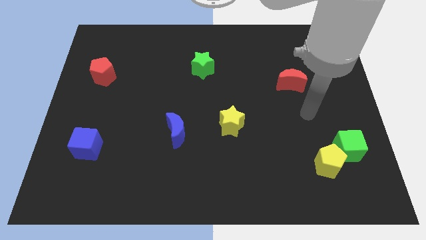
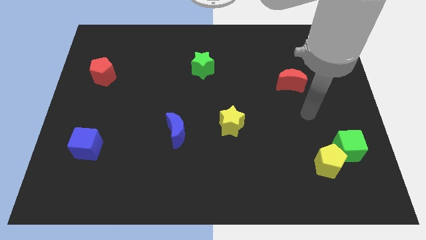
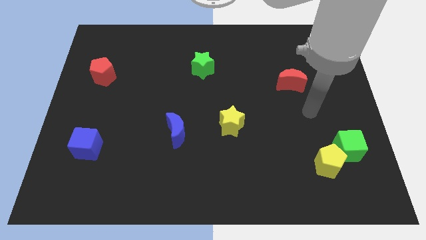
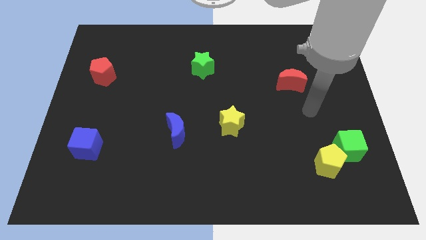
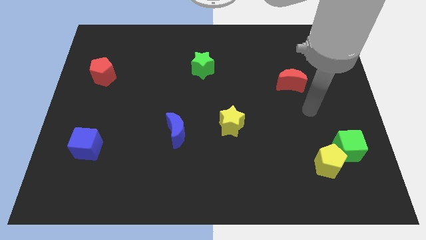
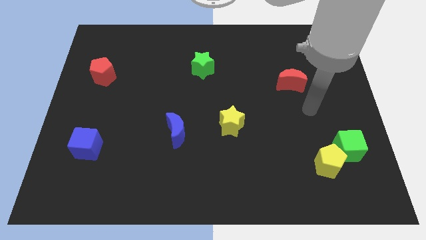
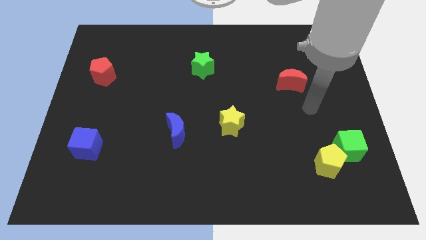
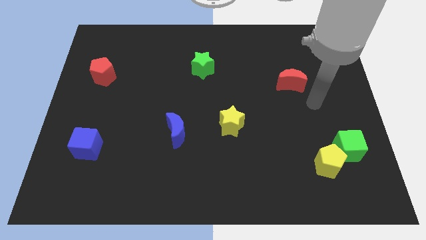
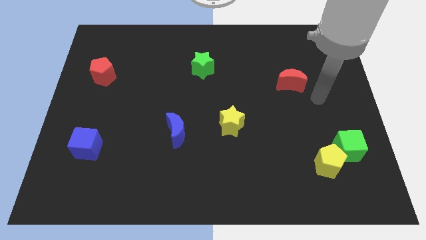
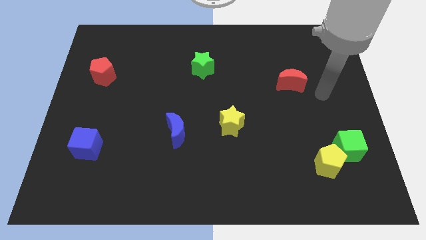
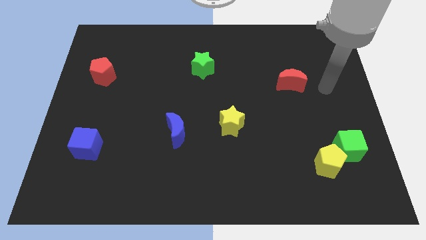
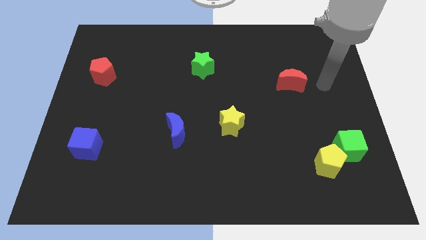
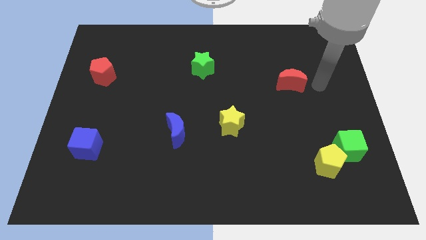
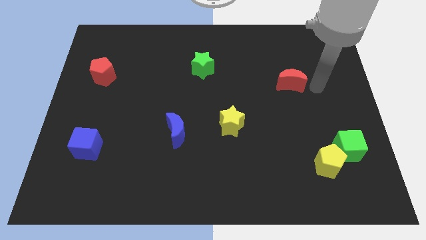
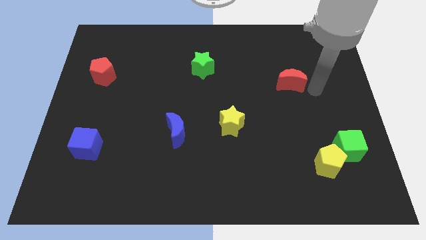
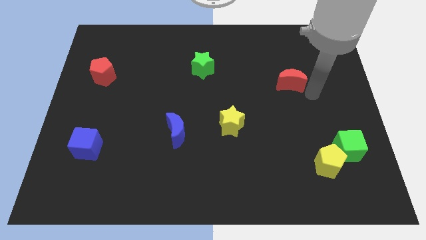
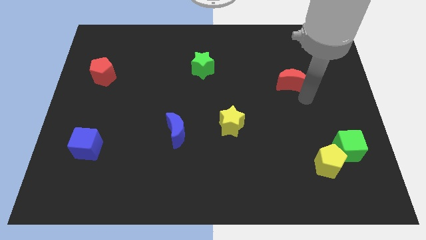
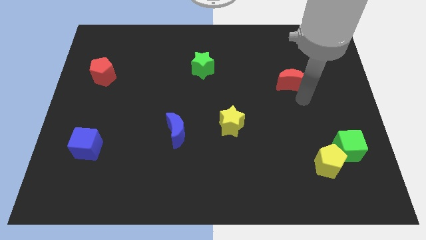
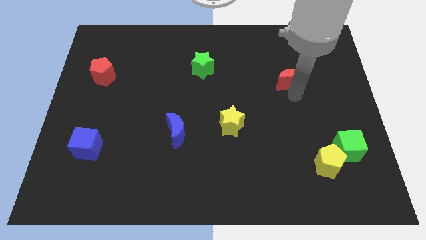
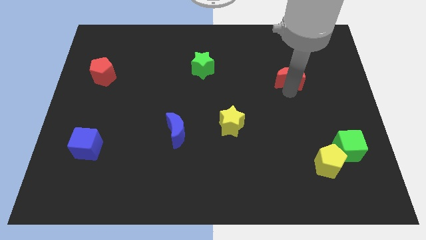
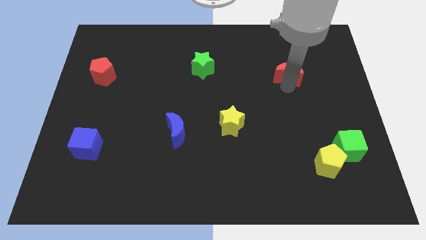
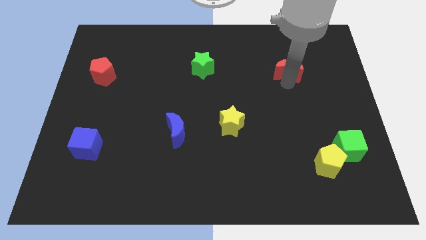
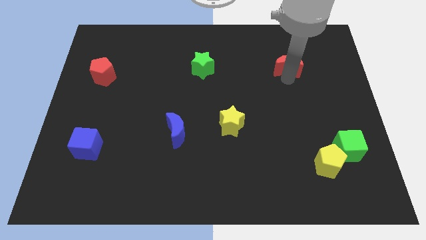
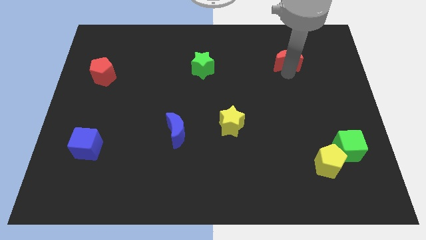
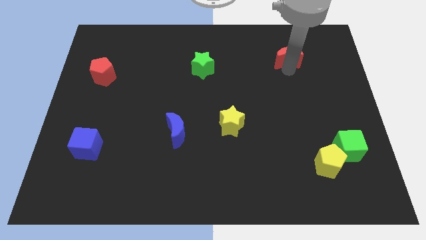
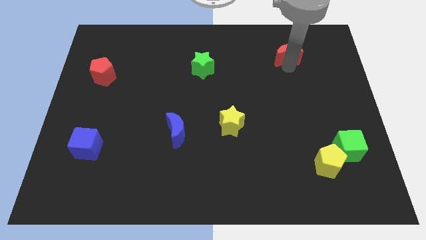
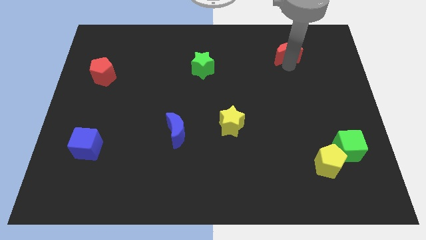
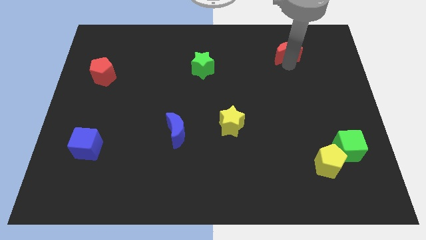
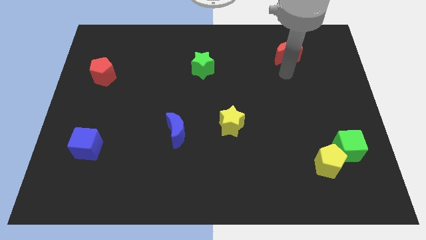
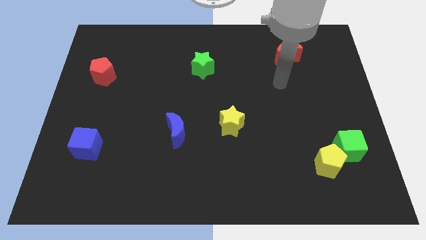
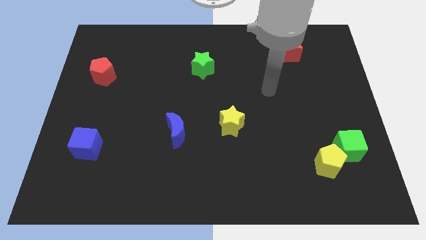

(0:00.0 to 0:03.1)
slide the red crescent upwards

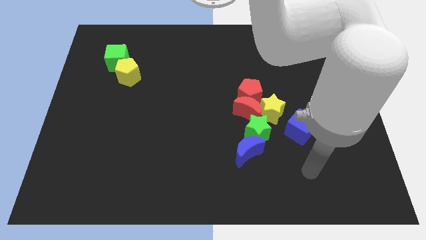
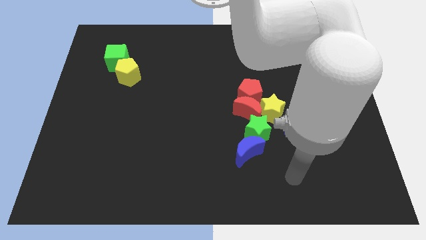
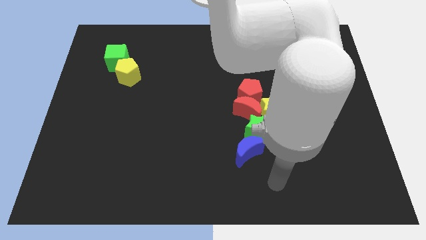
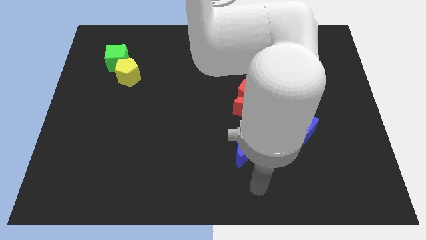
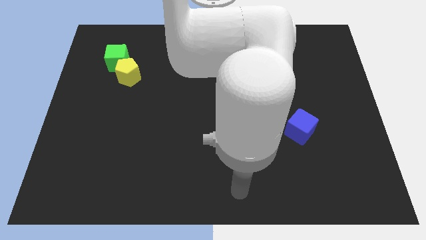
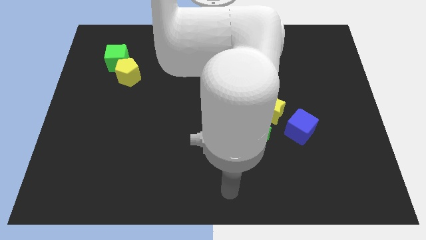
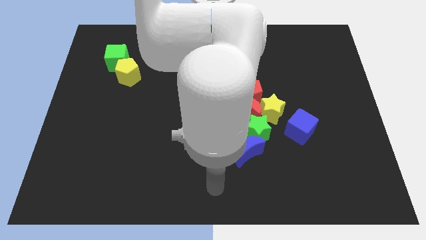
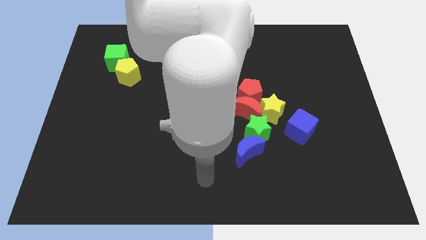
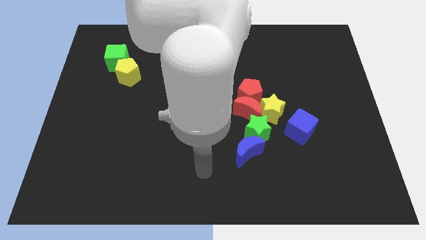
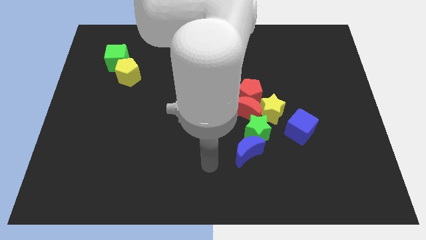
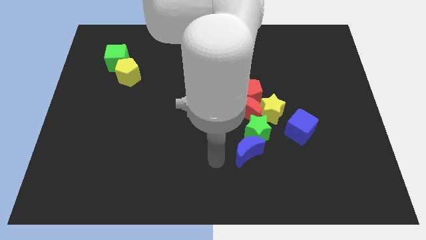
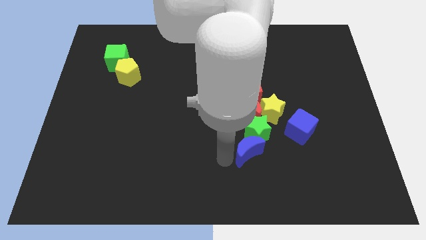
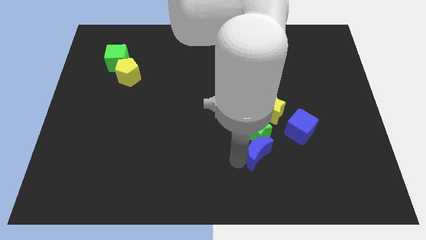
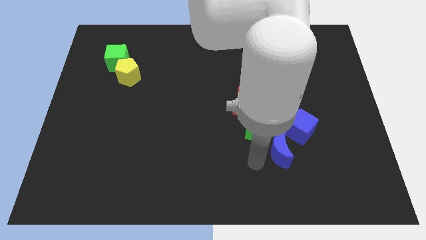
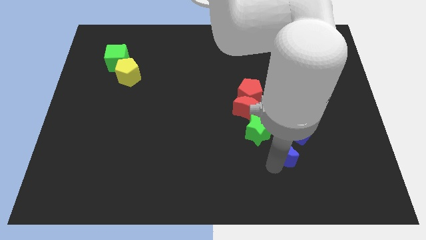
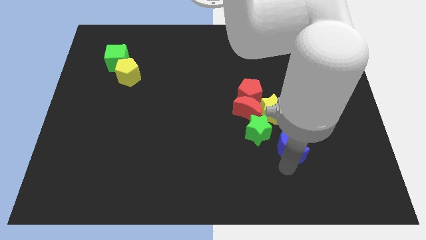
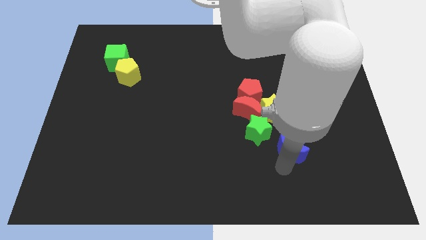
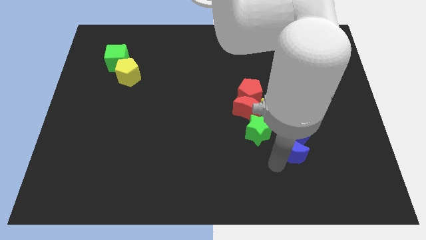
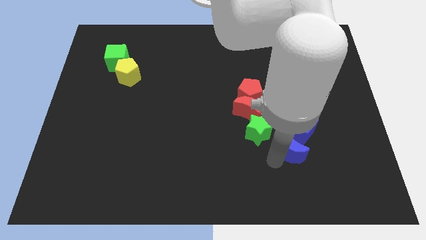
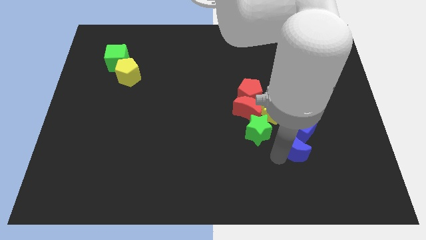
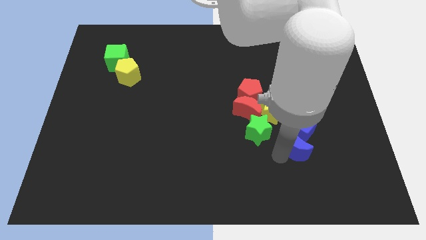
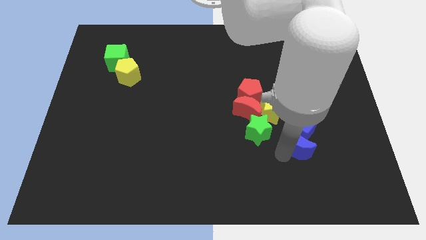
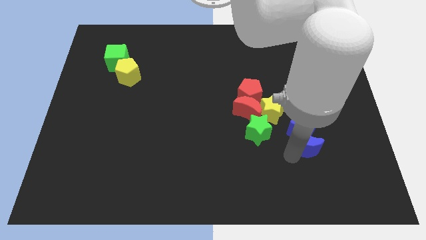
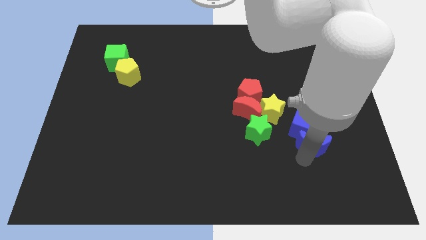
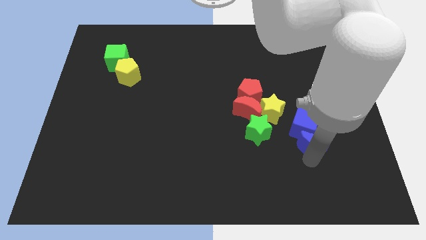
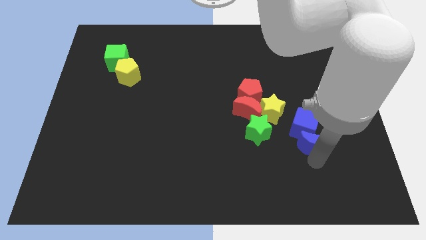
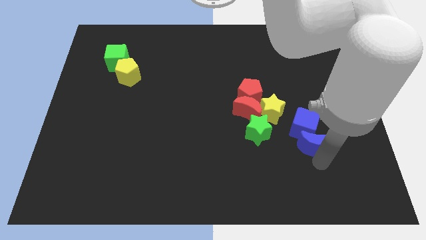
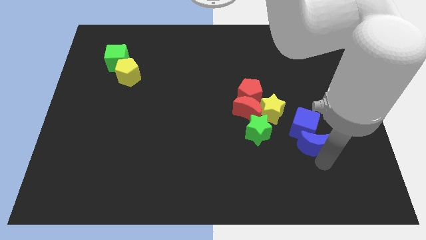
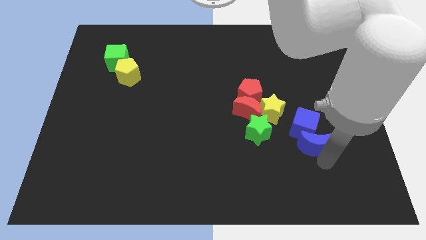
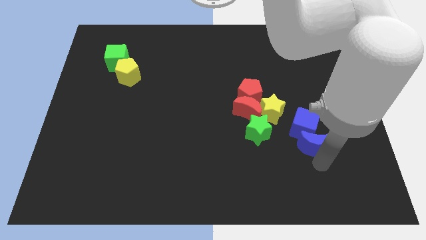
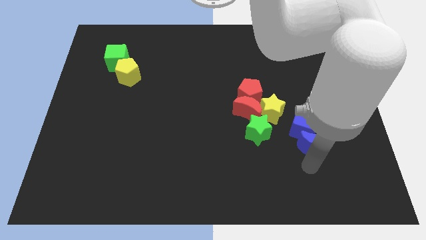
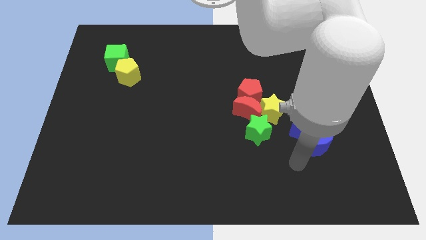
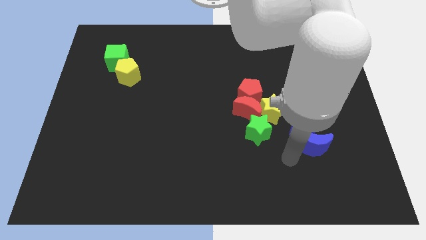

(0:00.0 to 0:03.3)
separate the blue crescent from the green star

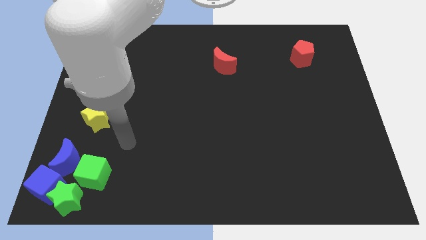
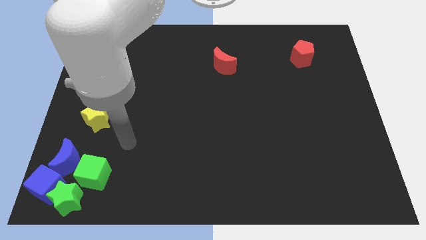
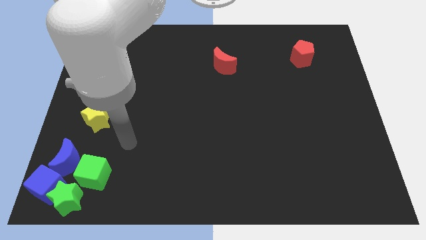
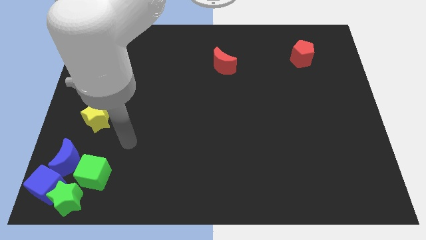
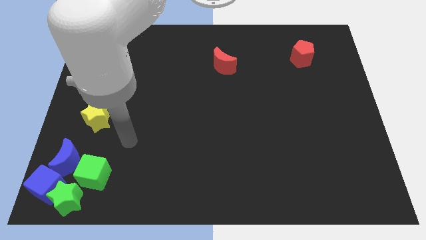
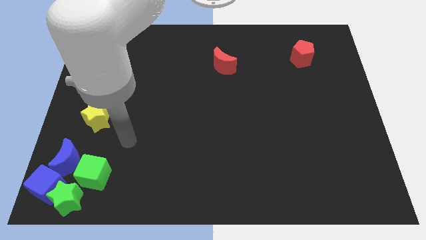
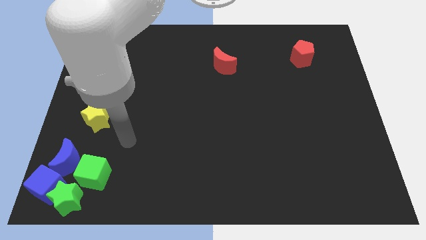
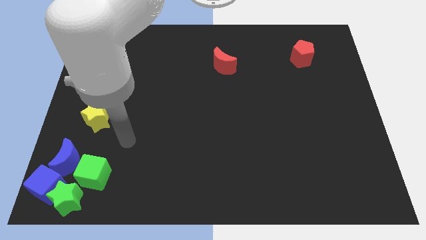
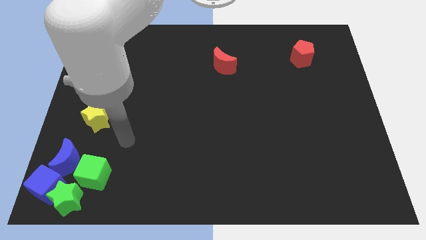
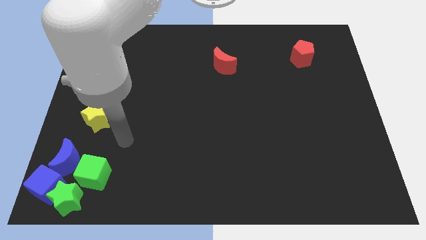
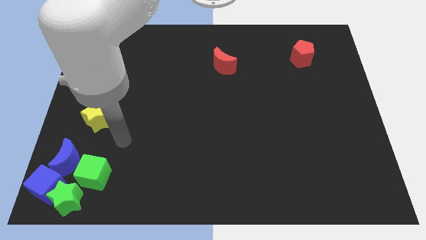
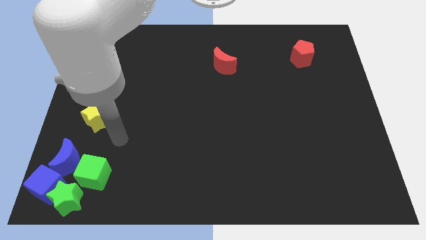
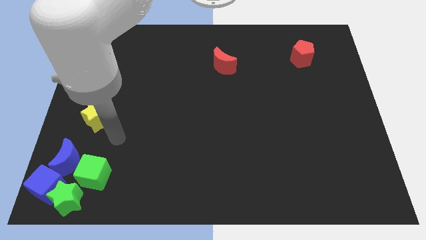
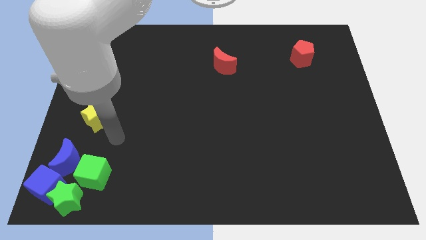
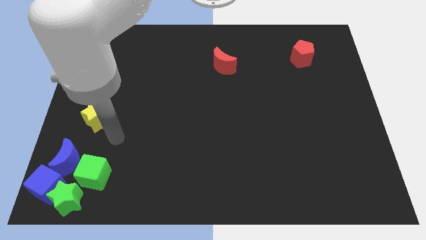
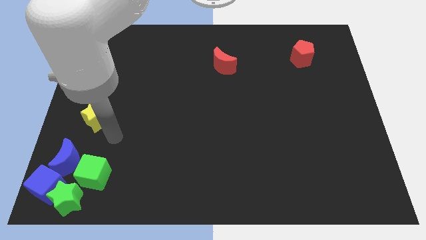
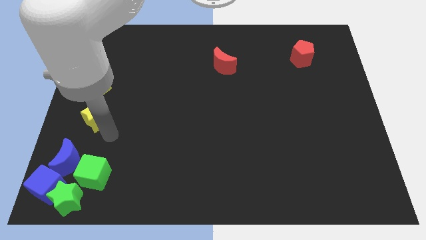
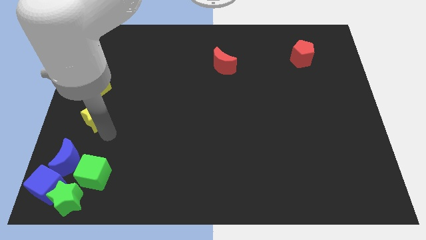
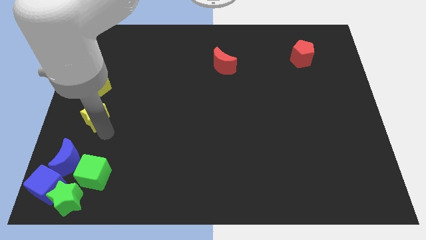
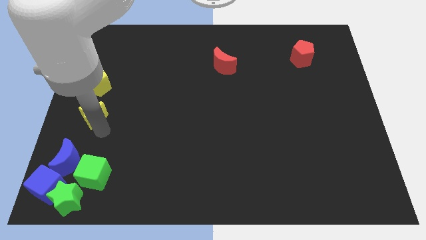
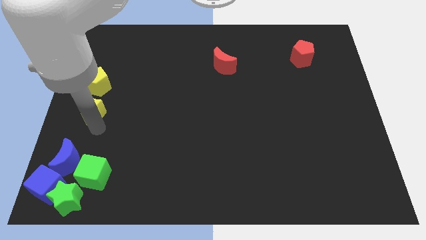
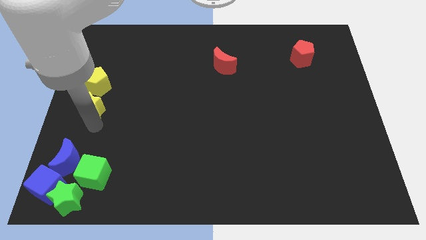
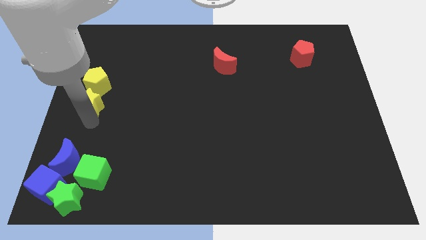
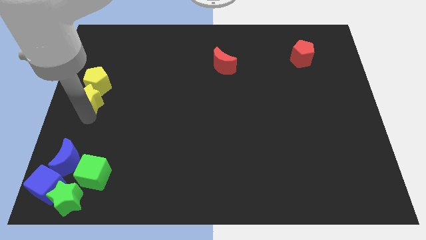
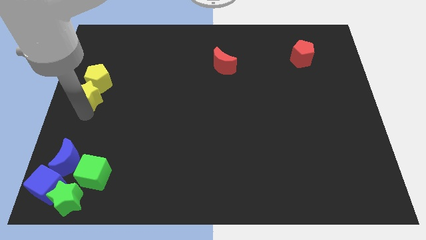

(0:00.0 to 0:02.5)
move yellow star below yellow pentagon

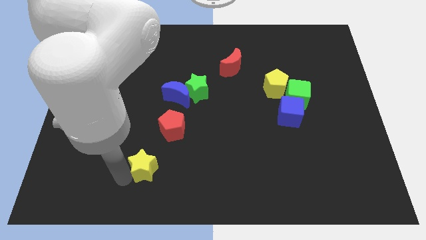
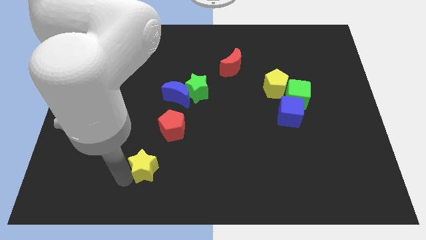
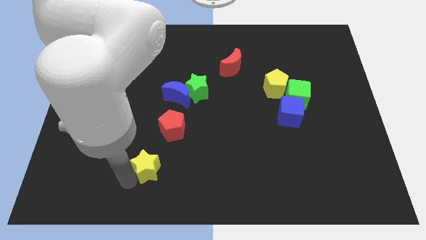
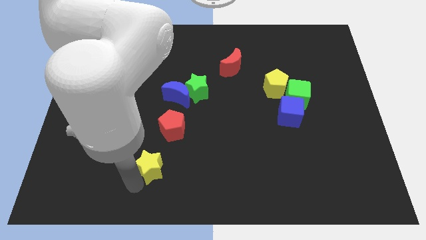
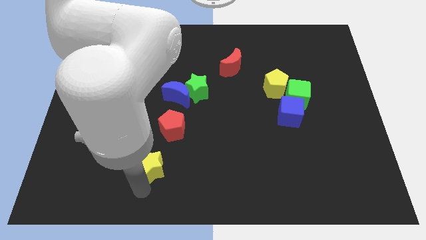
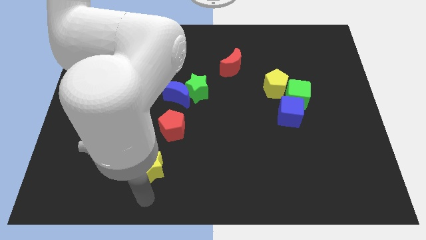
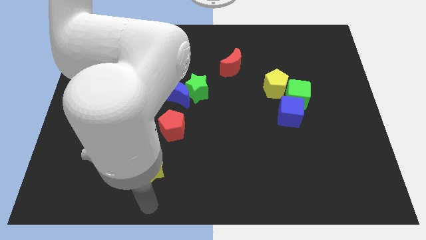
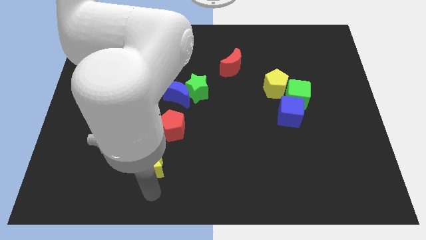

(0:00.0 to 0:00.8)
point your arm vertical yellow star
